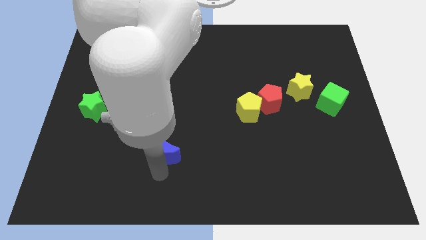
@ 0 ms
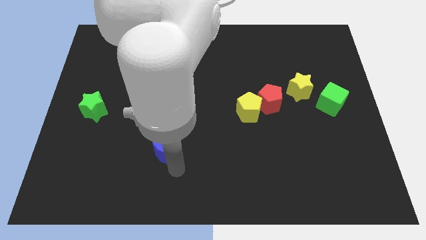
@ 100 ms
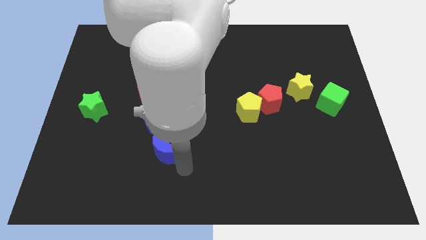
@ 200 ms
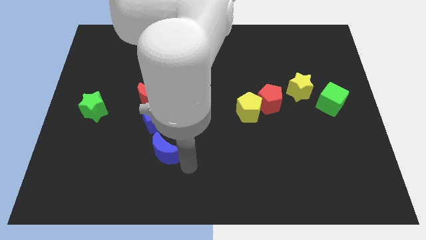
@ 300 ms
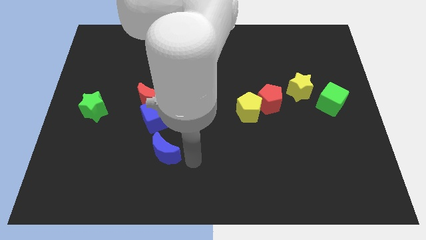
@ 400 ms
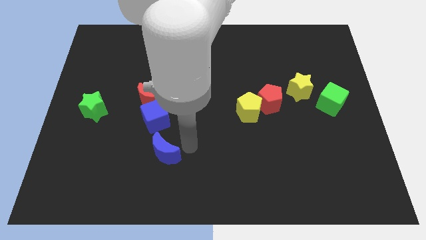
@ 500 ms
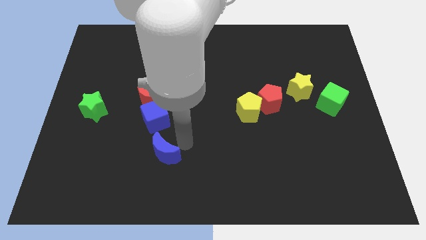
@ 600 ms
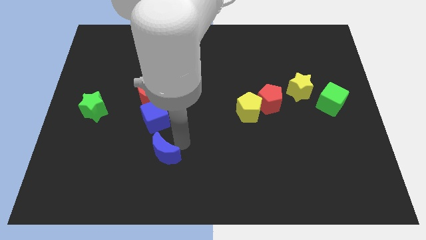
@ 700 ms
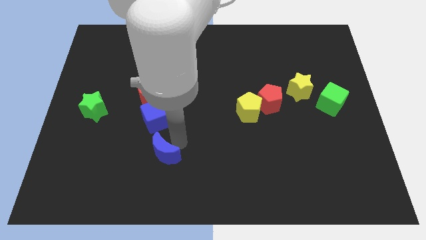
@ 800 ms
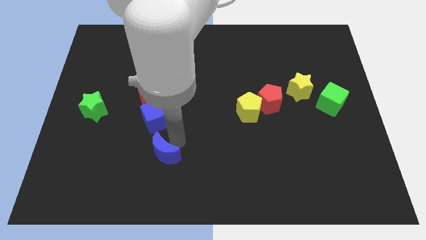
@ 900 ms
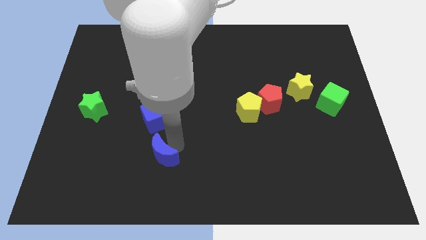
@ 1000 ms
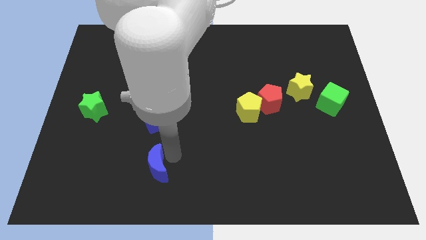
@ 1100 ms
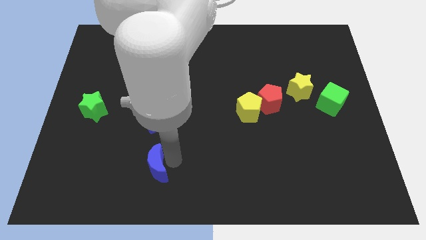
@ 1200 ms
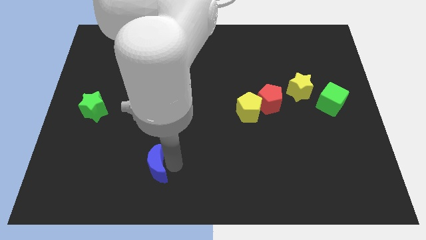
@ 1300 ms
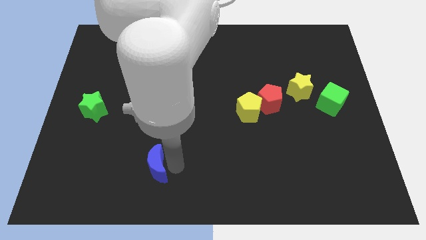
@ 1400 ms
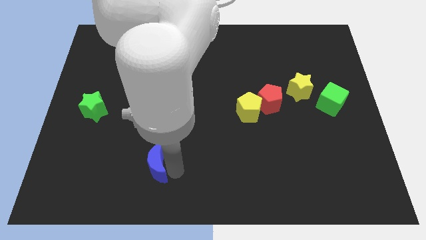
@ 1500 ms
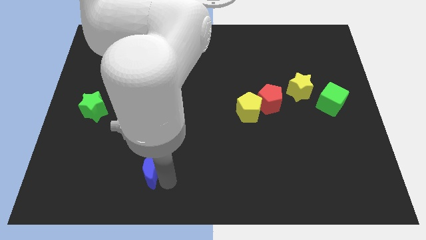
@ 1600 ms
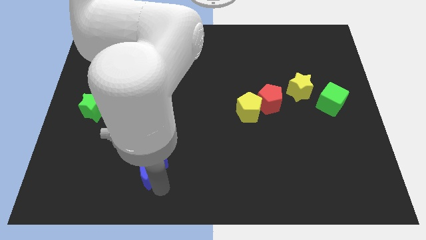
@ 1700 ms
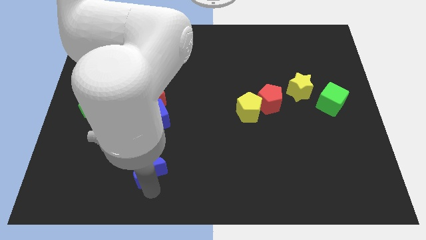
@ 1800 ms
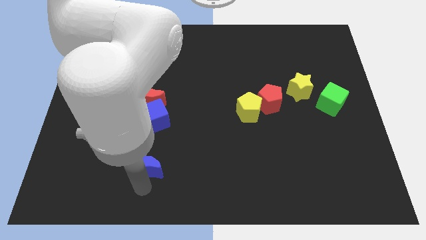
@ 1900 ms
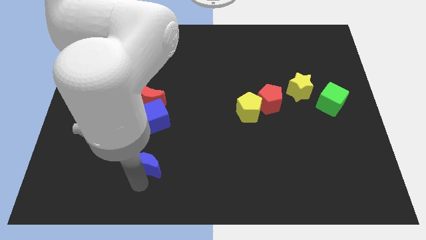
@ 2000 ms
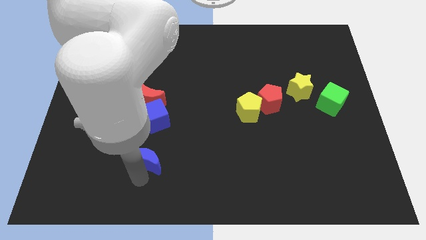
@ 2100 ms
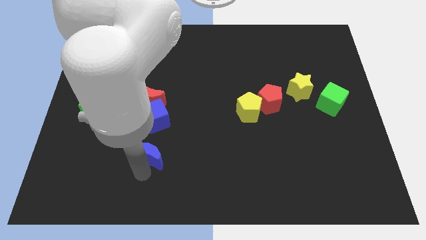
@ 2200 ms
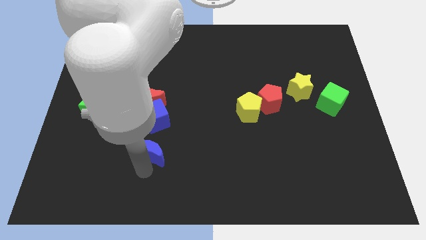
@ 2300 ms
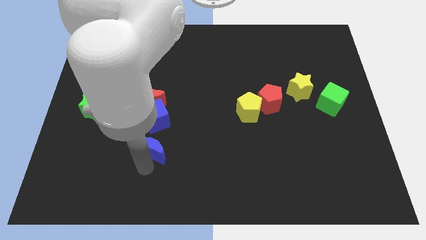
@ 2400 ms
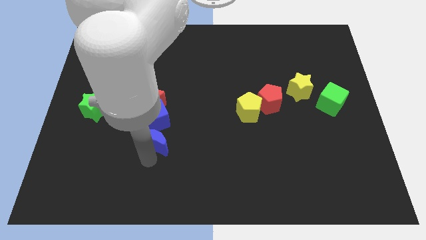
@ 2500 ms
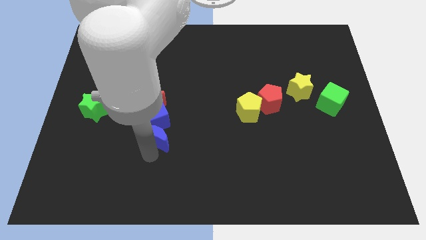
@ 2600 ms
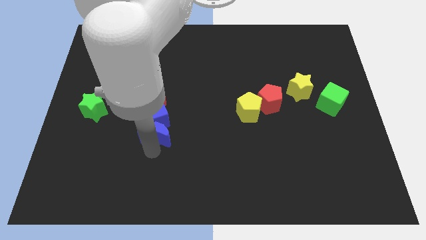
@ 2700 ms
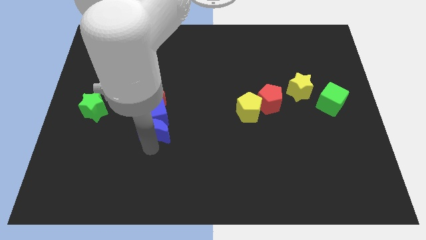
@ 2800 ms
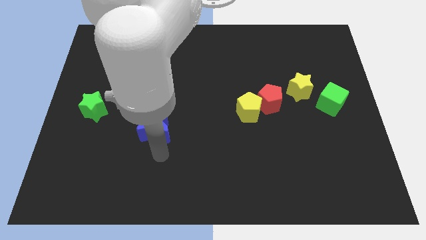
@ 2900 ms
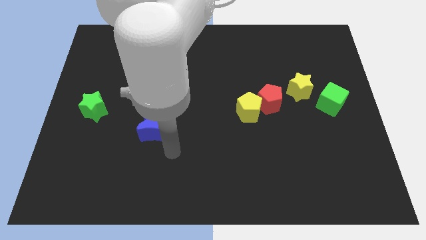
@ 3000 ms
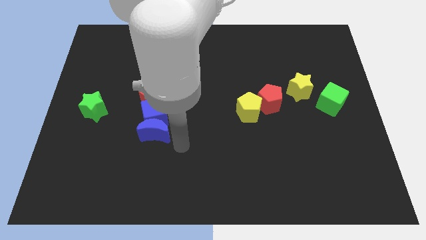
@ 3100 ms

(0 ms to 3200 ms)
push the blue crescent into blue cube

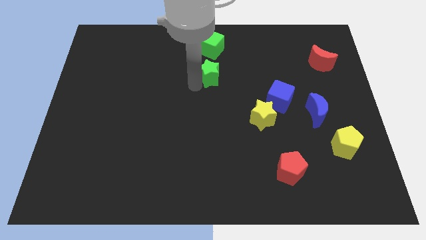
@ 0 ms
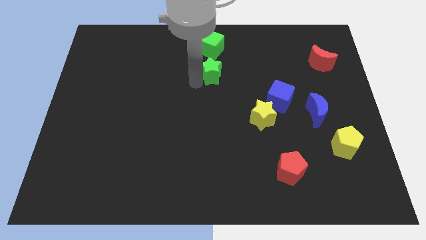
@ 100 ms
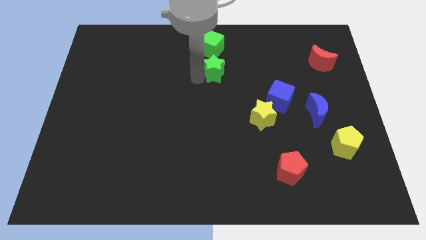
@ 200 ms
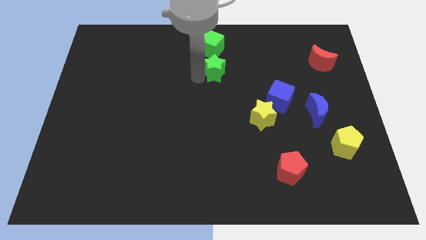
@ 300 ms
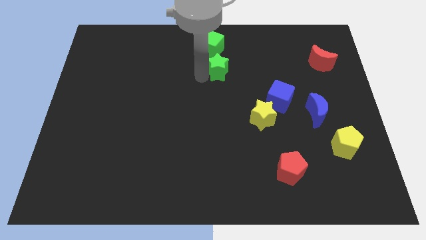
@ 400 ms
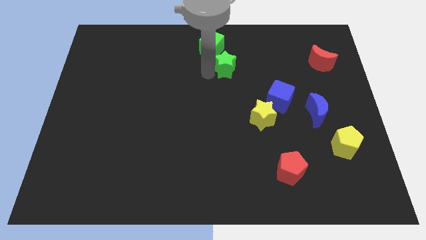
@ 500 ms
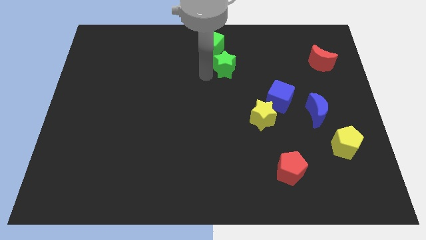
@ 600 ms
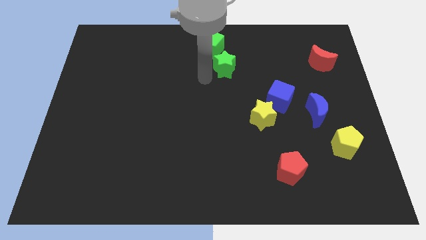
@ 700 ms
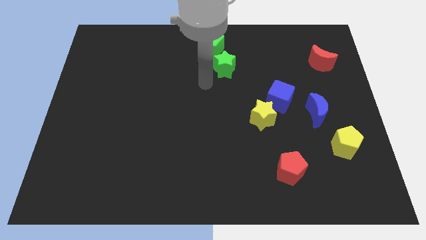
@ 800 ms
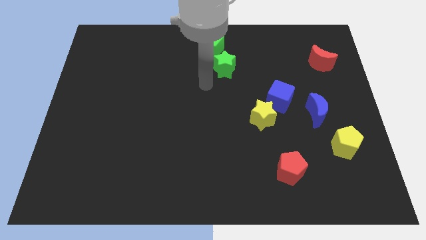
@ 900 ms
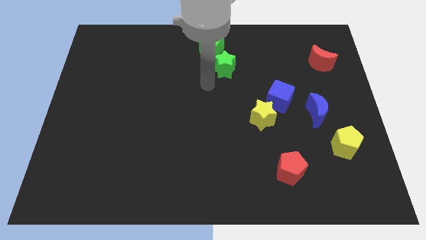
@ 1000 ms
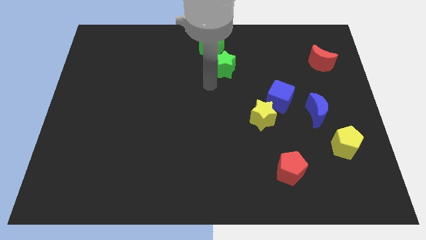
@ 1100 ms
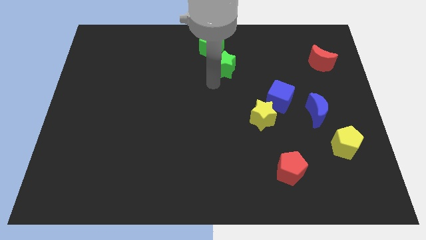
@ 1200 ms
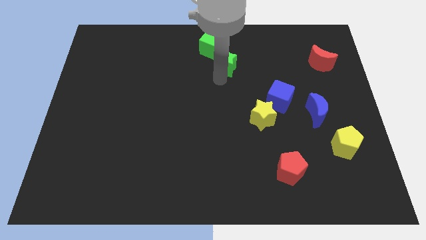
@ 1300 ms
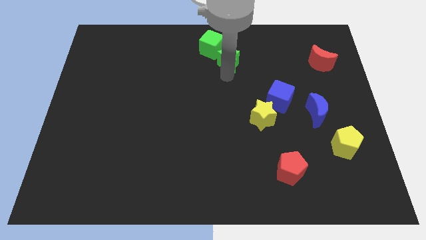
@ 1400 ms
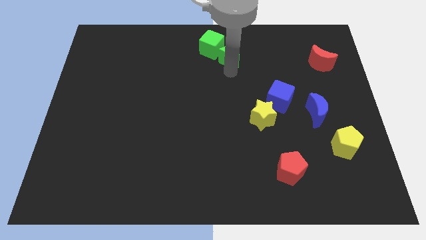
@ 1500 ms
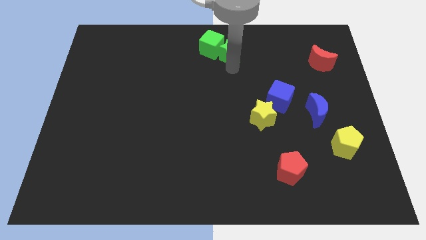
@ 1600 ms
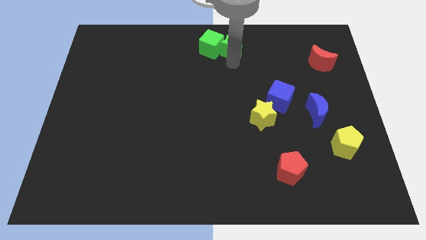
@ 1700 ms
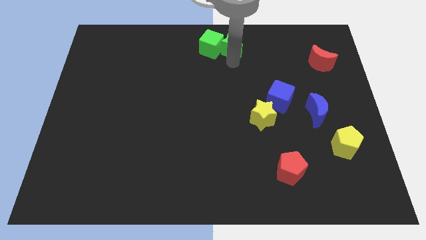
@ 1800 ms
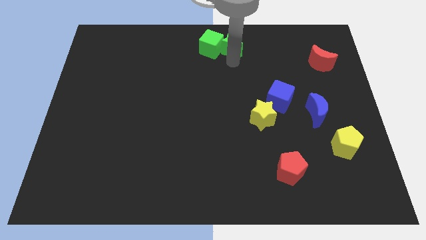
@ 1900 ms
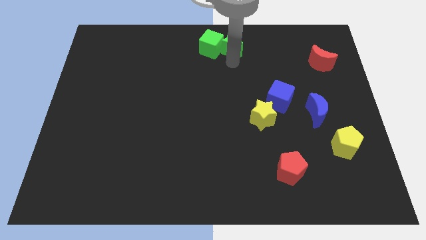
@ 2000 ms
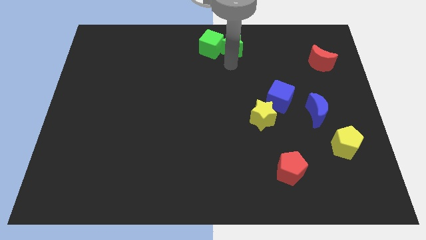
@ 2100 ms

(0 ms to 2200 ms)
place green star on the right side of the green cube

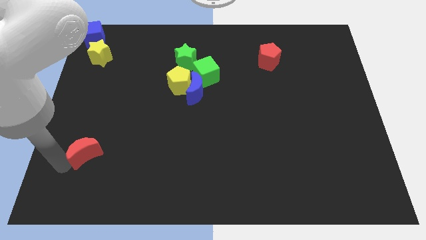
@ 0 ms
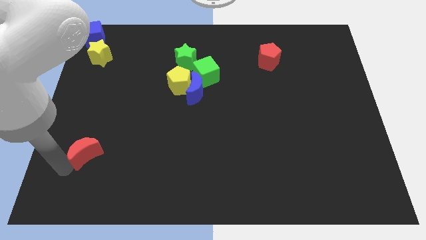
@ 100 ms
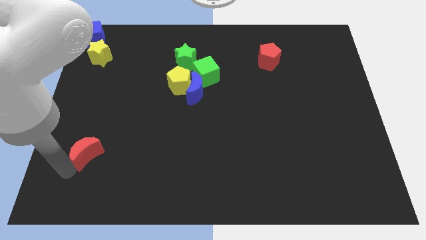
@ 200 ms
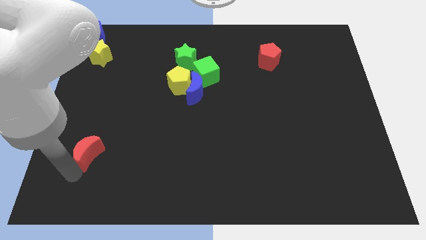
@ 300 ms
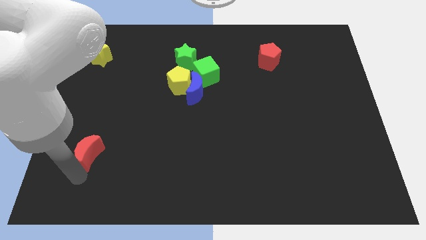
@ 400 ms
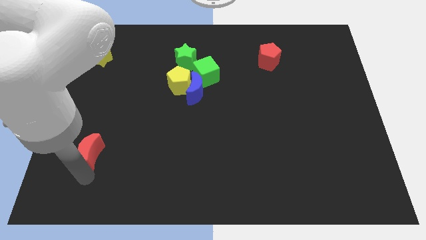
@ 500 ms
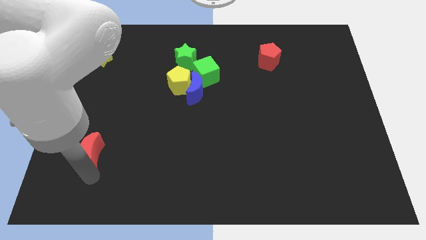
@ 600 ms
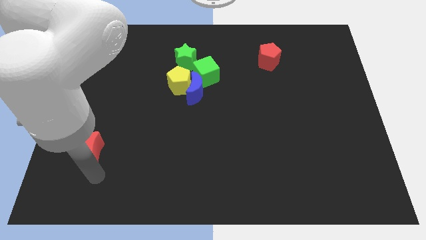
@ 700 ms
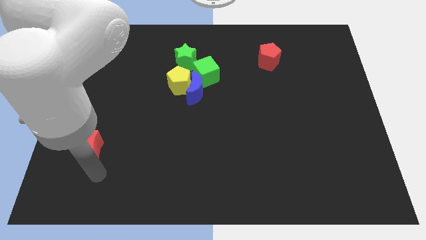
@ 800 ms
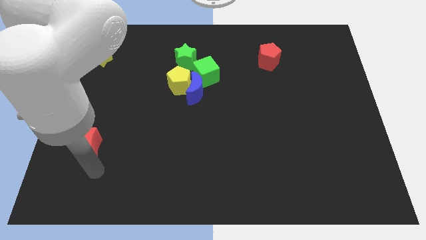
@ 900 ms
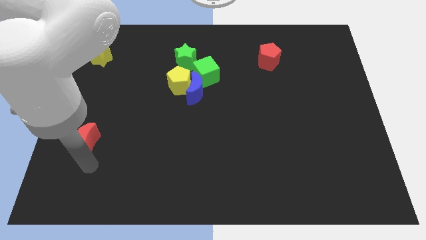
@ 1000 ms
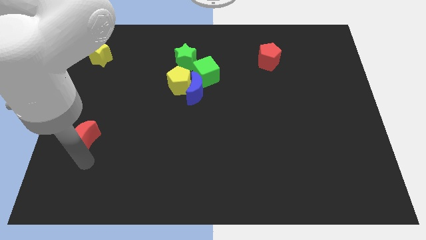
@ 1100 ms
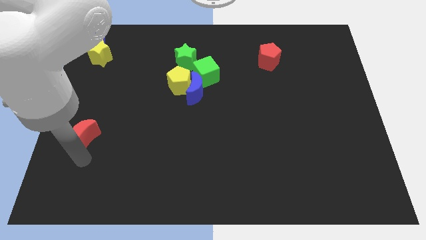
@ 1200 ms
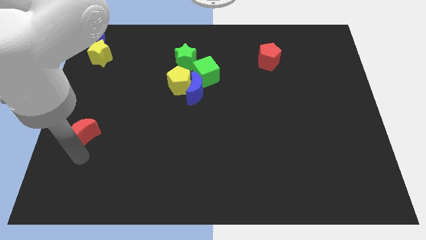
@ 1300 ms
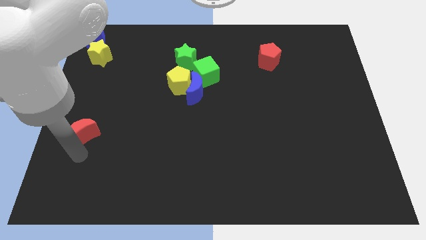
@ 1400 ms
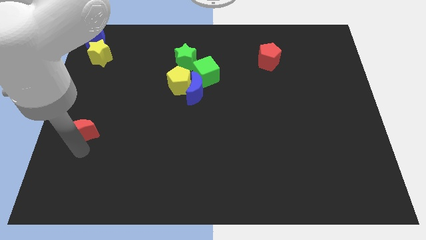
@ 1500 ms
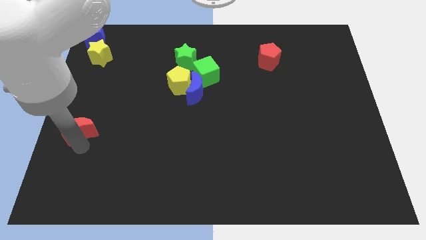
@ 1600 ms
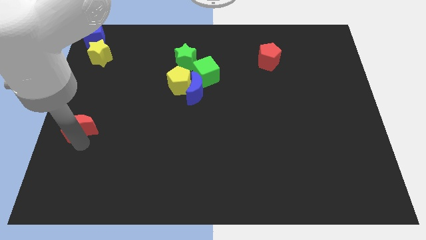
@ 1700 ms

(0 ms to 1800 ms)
push the red crescent towards the center left of the board

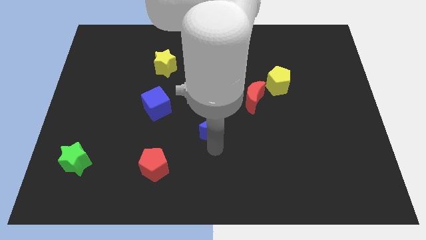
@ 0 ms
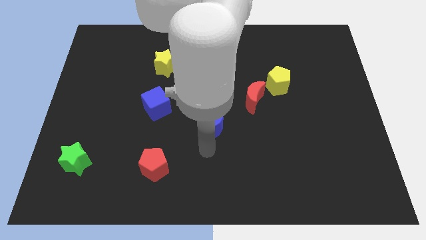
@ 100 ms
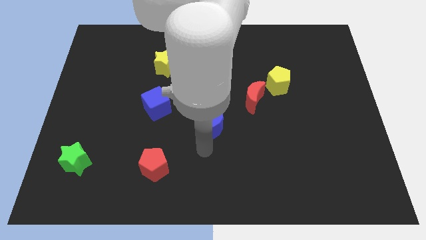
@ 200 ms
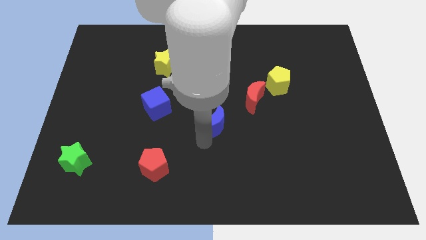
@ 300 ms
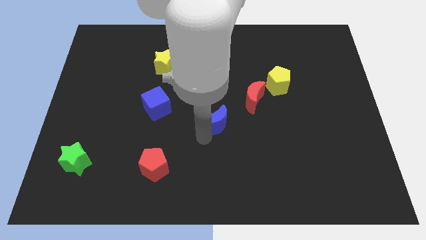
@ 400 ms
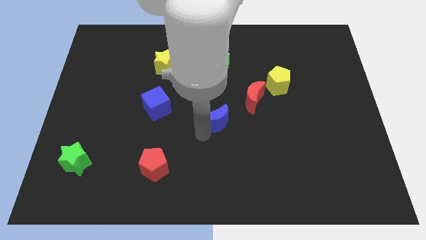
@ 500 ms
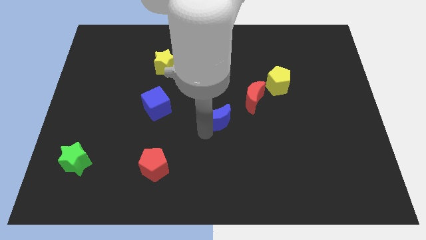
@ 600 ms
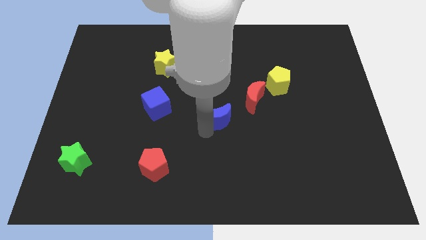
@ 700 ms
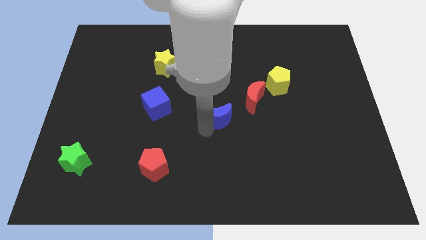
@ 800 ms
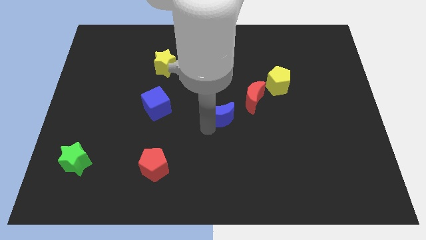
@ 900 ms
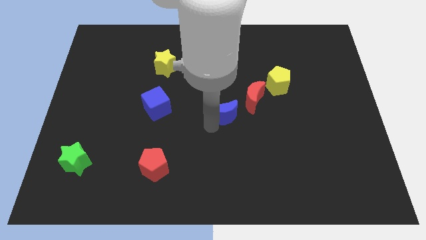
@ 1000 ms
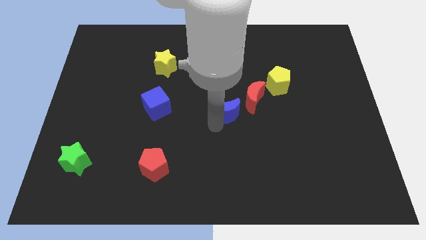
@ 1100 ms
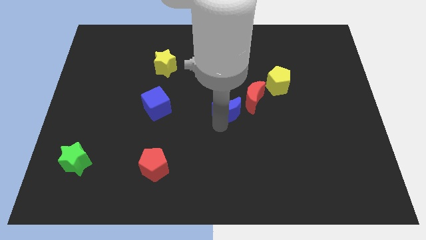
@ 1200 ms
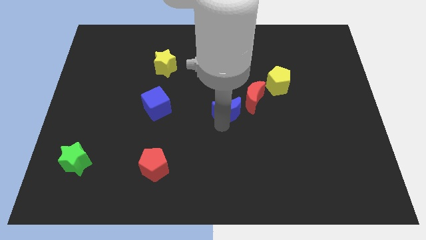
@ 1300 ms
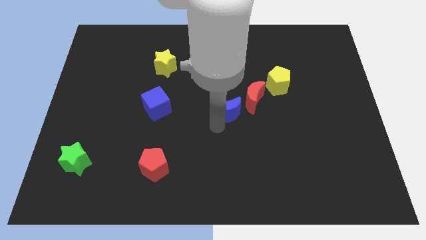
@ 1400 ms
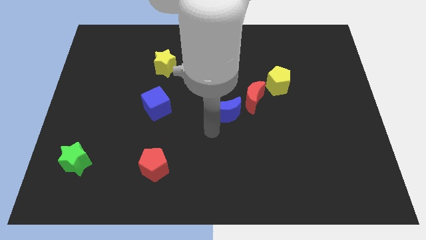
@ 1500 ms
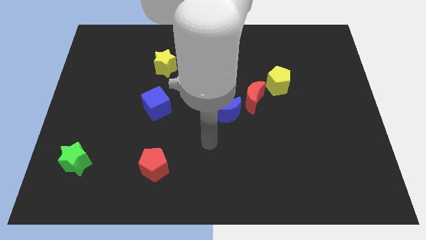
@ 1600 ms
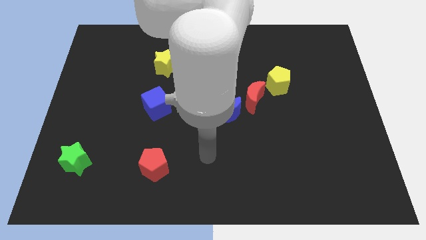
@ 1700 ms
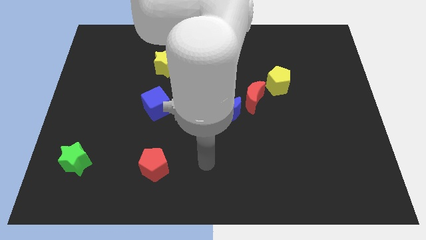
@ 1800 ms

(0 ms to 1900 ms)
move the blue moon close to the red moon
